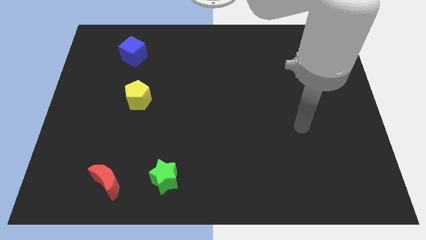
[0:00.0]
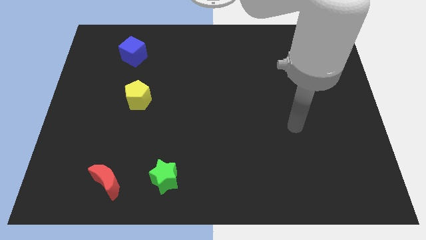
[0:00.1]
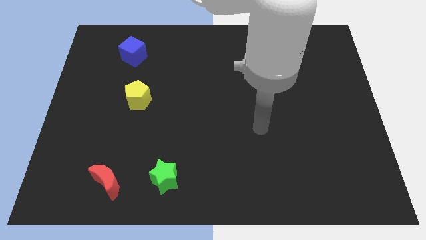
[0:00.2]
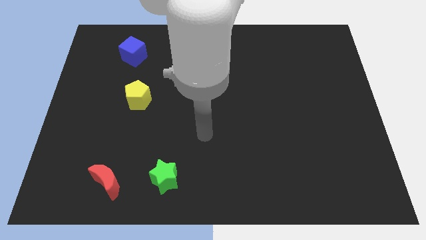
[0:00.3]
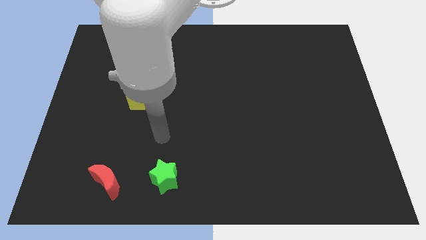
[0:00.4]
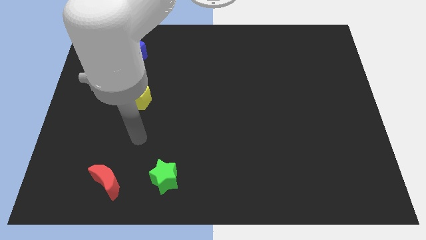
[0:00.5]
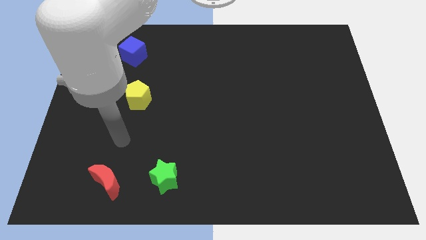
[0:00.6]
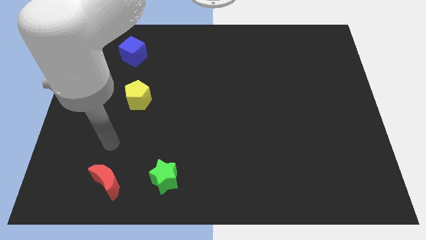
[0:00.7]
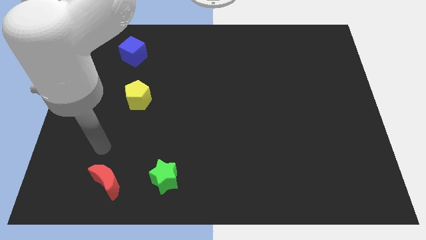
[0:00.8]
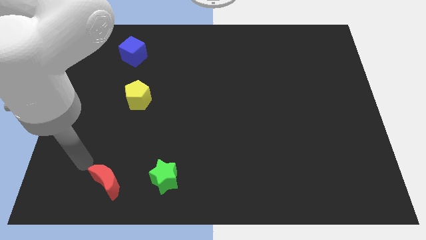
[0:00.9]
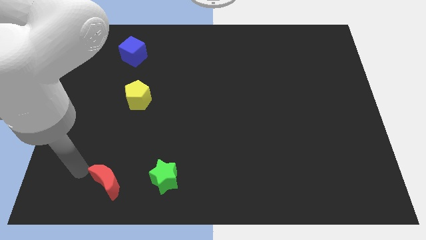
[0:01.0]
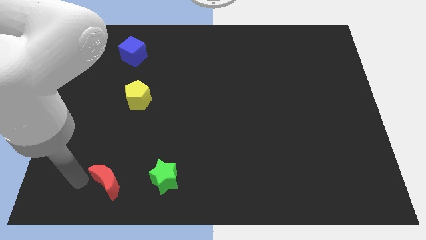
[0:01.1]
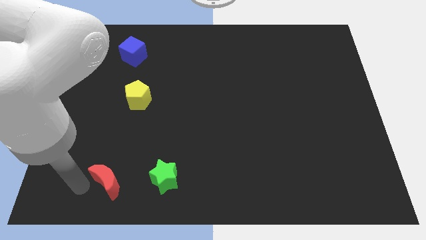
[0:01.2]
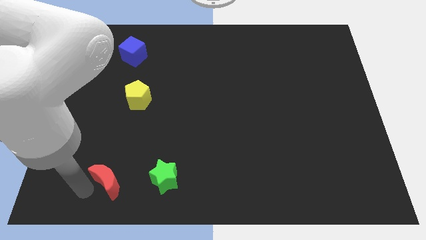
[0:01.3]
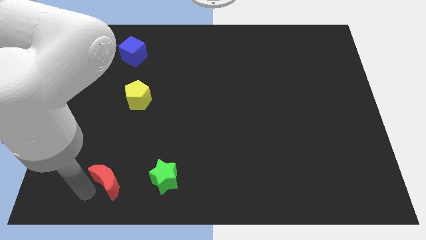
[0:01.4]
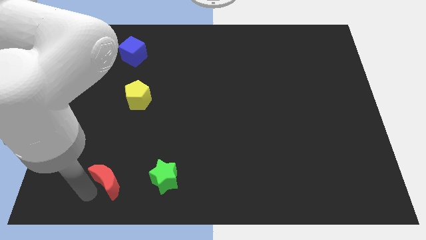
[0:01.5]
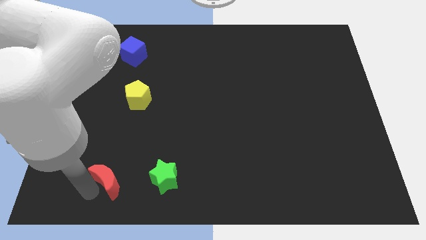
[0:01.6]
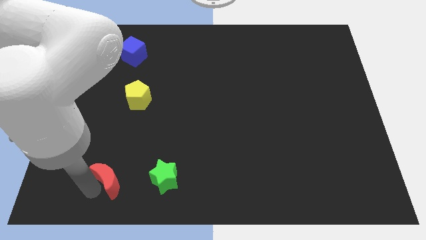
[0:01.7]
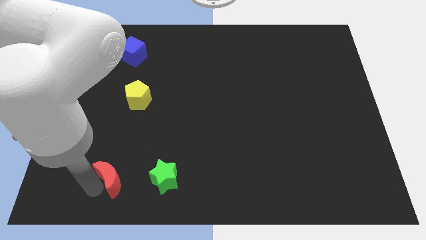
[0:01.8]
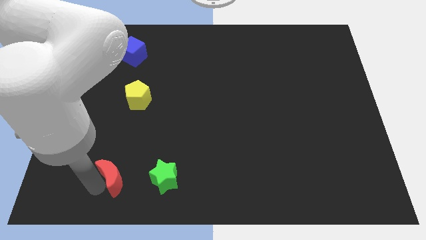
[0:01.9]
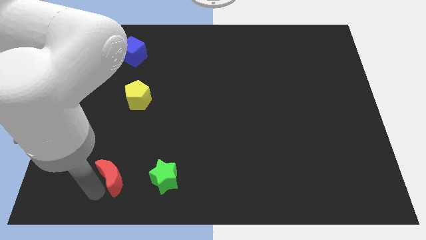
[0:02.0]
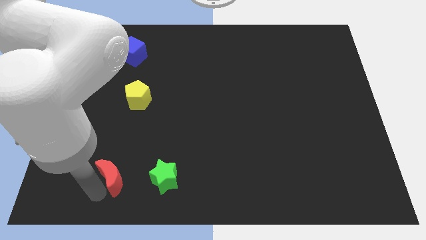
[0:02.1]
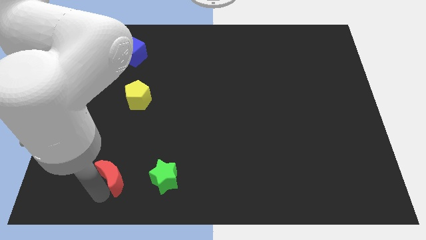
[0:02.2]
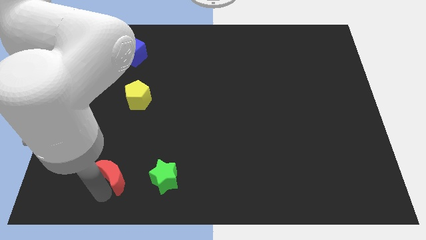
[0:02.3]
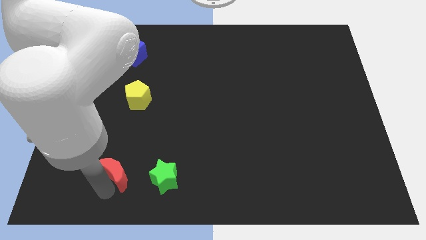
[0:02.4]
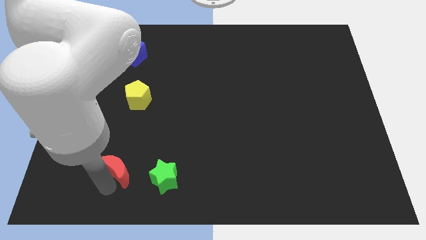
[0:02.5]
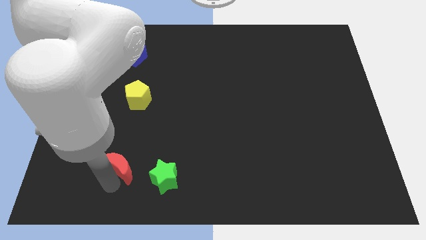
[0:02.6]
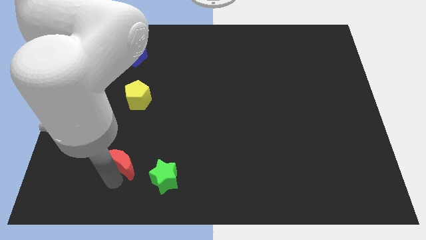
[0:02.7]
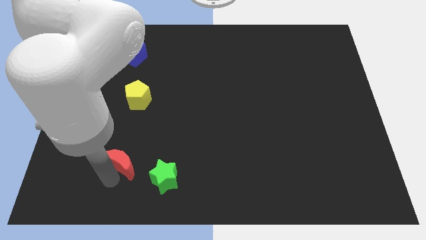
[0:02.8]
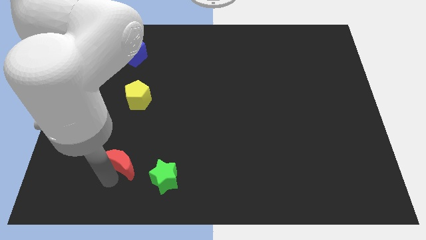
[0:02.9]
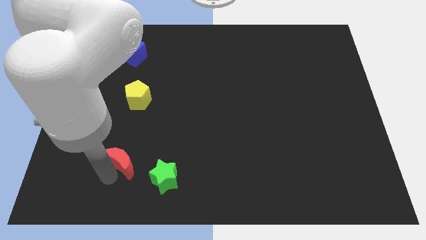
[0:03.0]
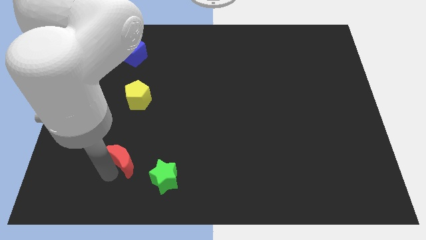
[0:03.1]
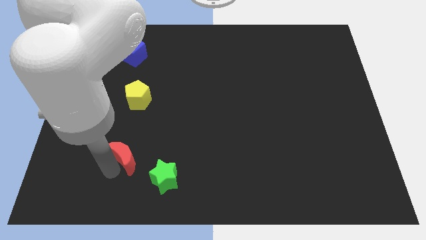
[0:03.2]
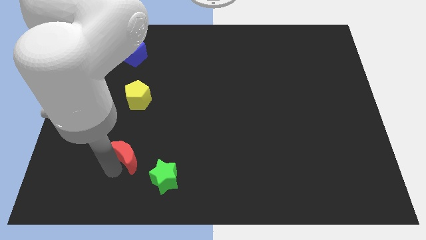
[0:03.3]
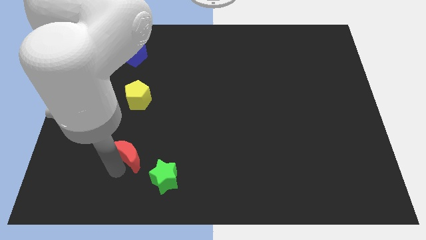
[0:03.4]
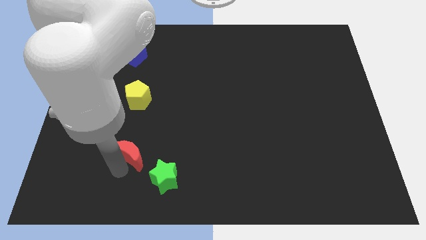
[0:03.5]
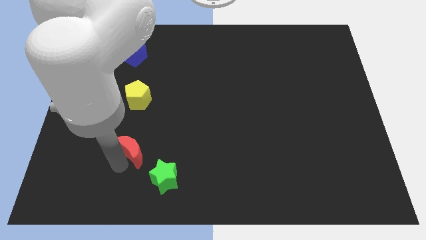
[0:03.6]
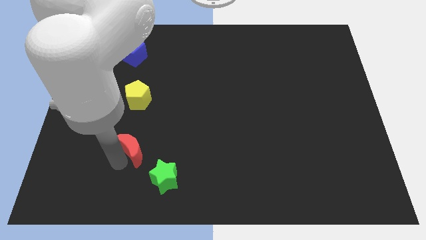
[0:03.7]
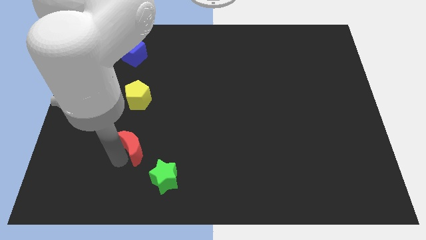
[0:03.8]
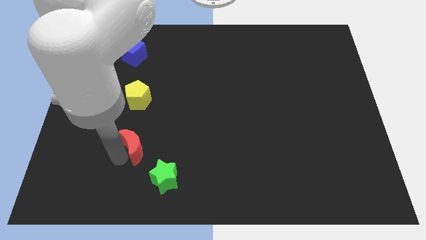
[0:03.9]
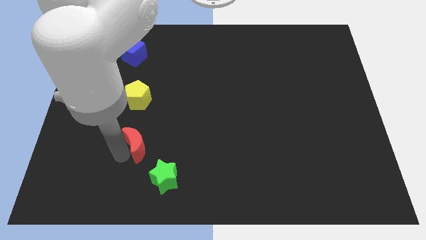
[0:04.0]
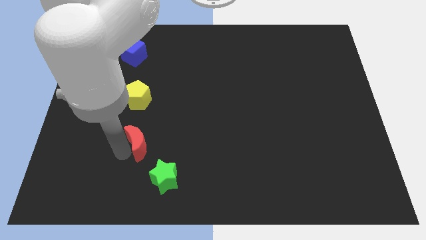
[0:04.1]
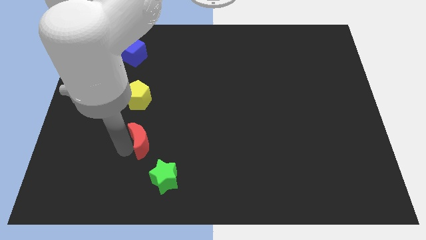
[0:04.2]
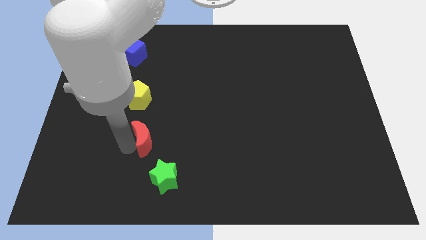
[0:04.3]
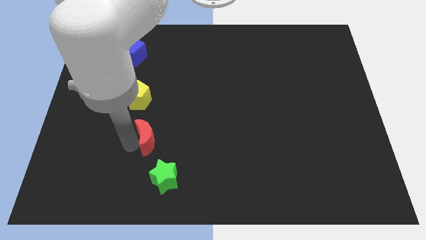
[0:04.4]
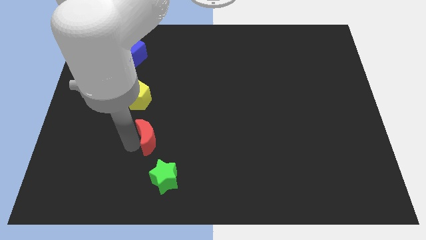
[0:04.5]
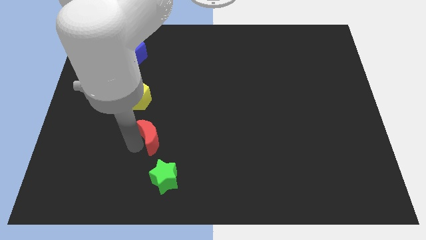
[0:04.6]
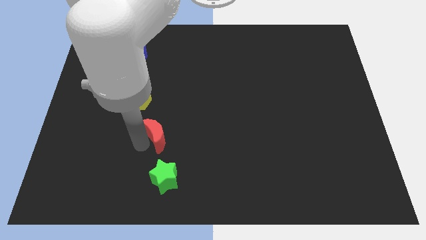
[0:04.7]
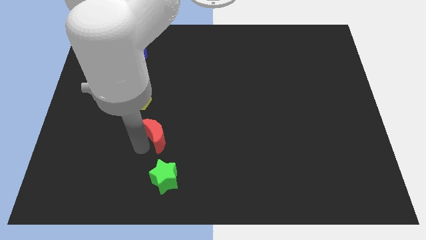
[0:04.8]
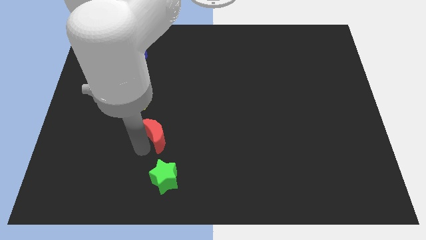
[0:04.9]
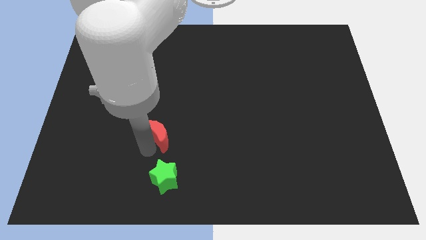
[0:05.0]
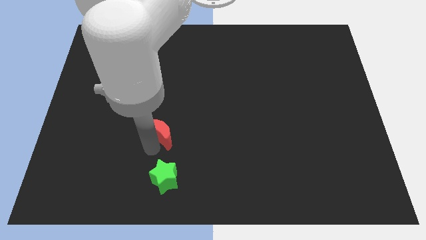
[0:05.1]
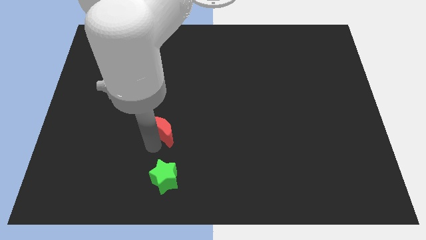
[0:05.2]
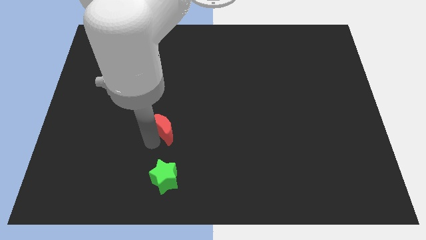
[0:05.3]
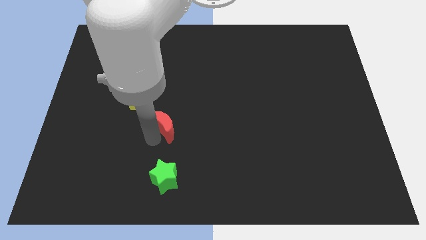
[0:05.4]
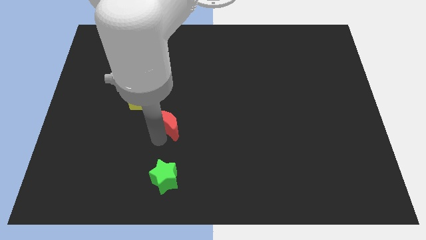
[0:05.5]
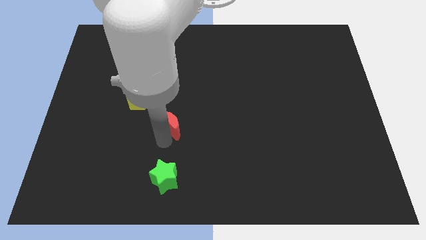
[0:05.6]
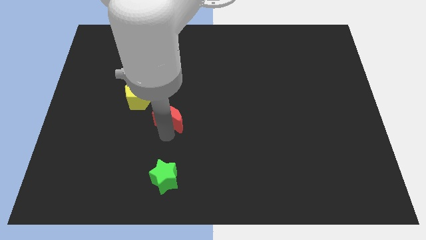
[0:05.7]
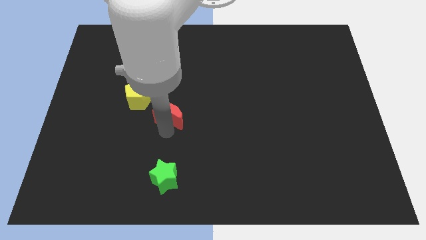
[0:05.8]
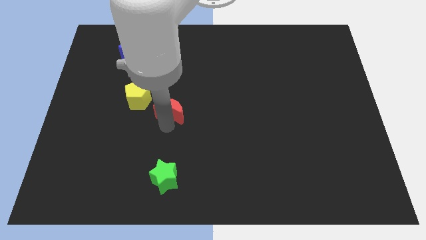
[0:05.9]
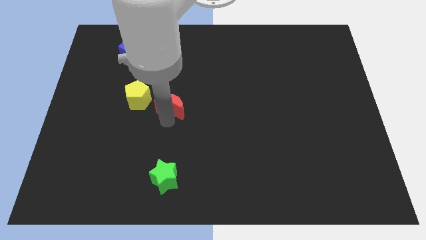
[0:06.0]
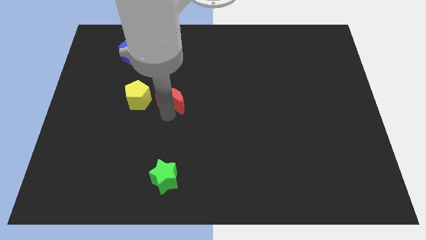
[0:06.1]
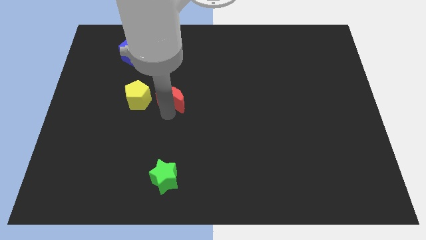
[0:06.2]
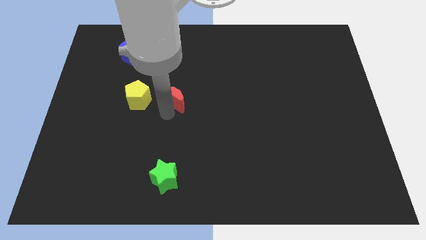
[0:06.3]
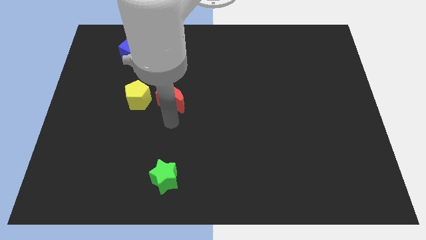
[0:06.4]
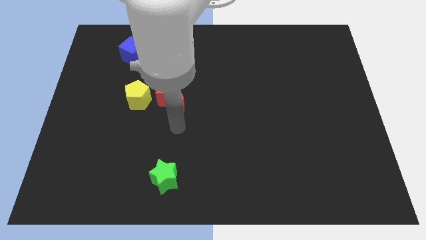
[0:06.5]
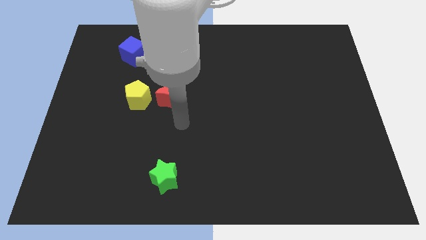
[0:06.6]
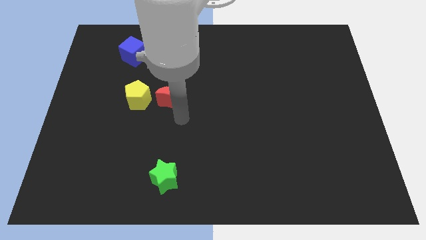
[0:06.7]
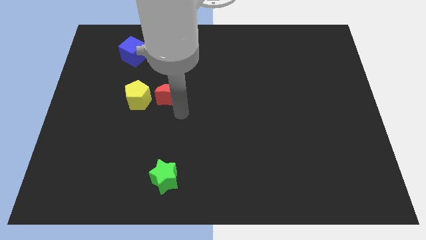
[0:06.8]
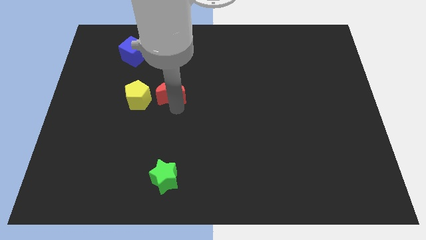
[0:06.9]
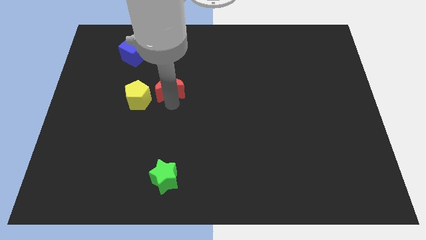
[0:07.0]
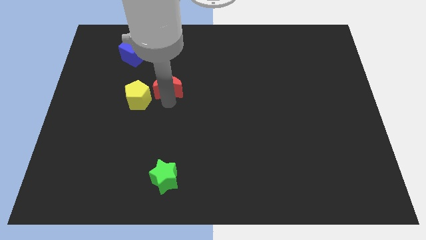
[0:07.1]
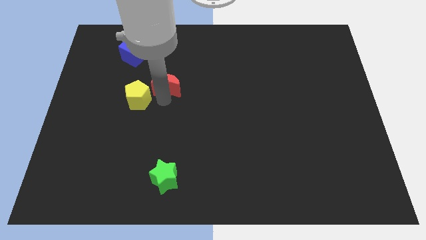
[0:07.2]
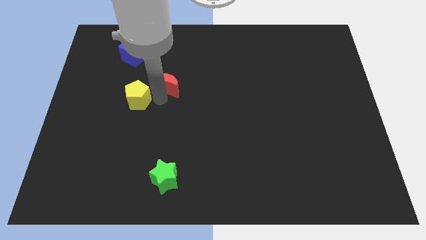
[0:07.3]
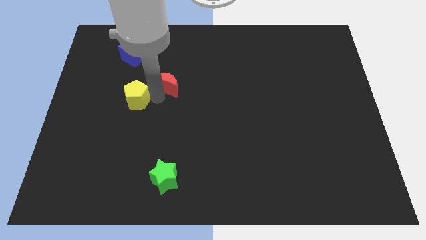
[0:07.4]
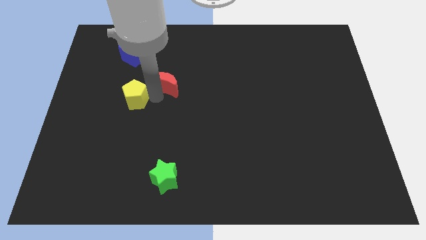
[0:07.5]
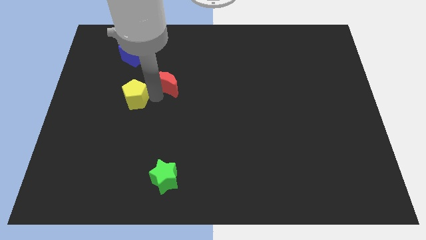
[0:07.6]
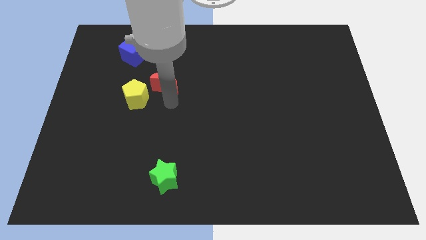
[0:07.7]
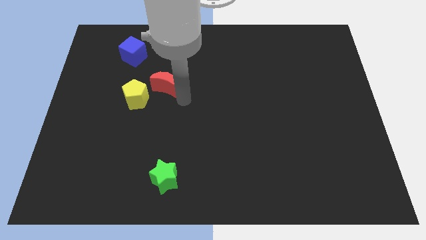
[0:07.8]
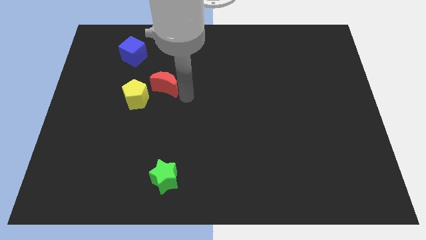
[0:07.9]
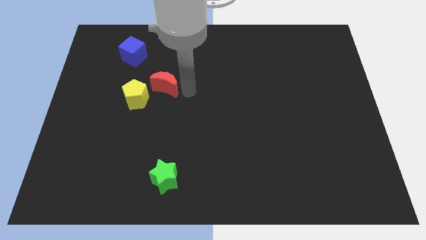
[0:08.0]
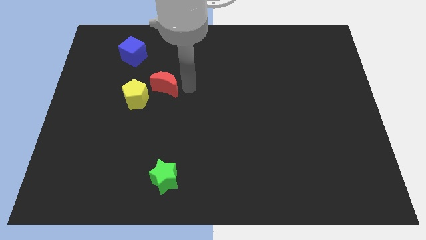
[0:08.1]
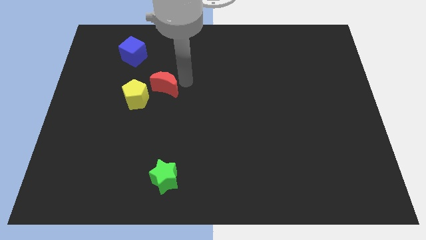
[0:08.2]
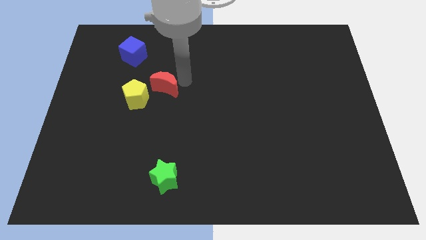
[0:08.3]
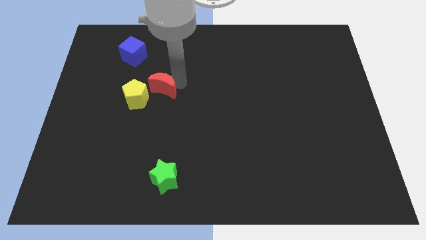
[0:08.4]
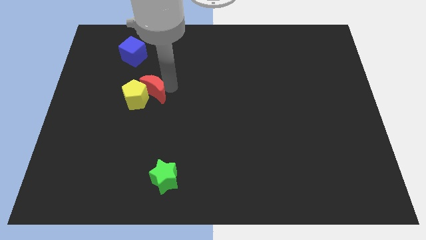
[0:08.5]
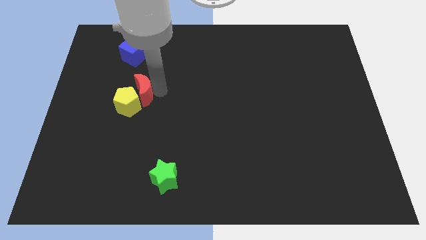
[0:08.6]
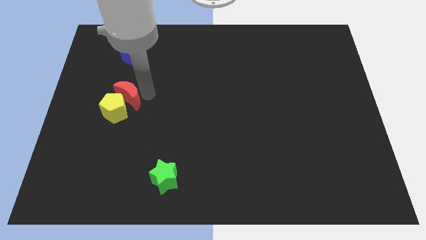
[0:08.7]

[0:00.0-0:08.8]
push the moon to the yellow pentagon
